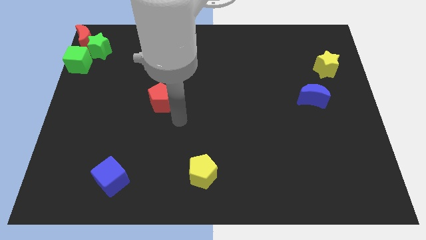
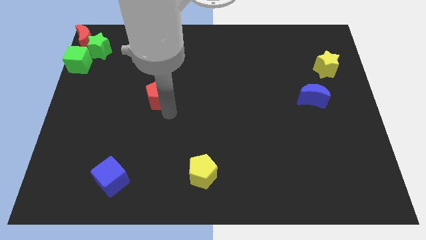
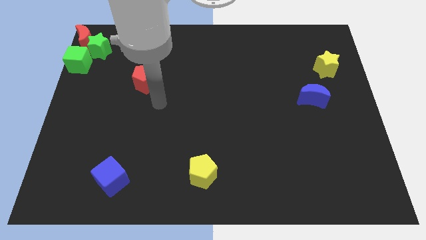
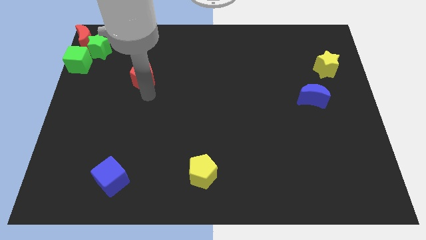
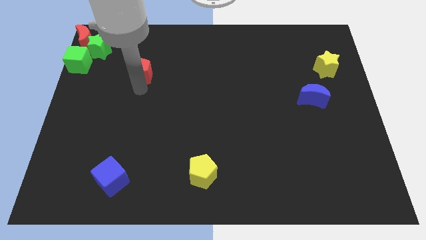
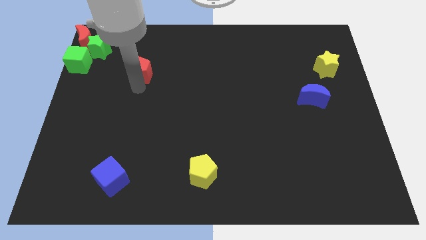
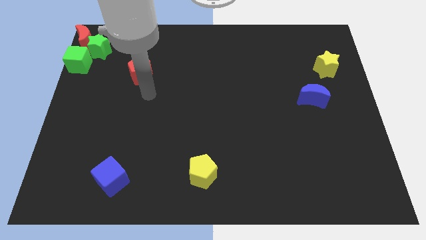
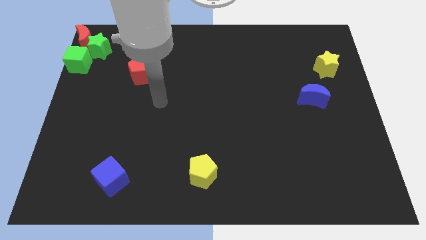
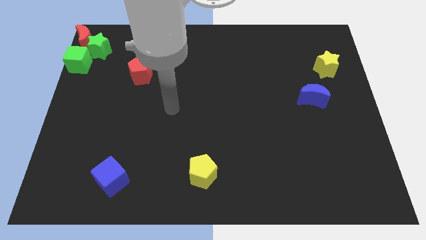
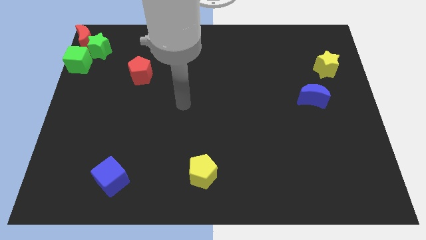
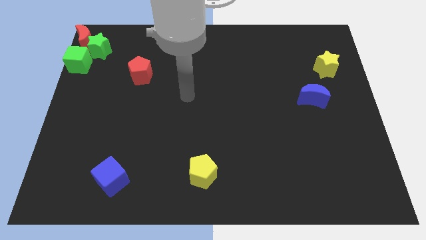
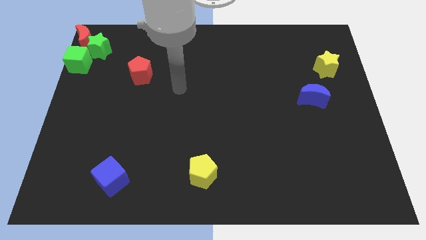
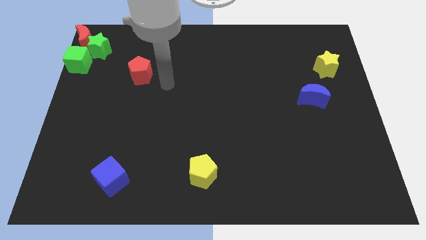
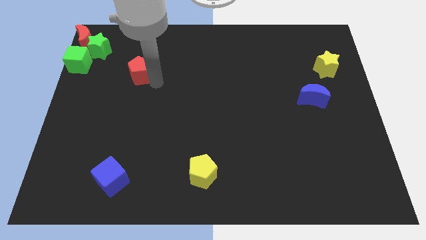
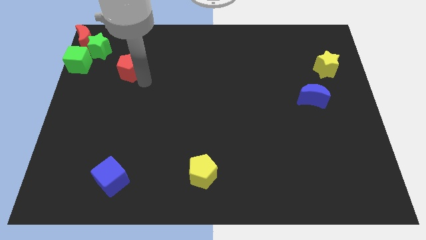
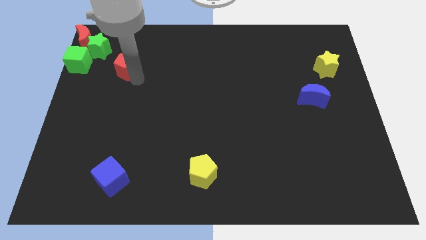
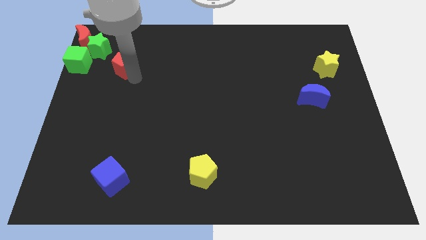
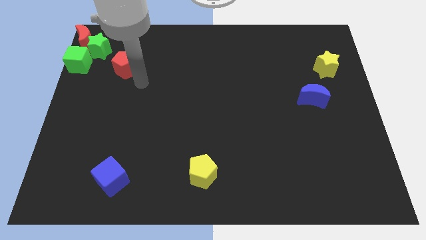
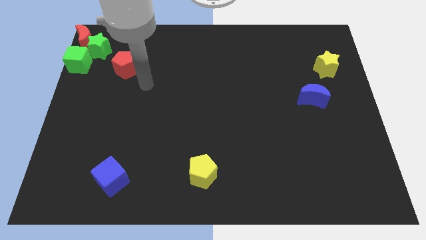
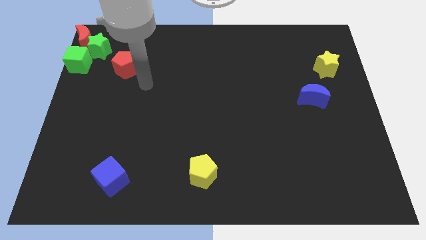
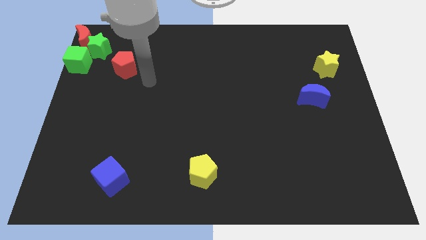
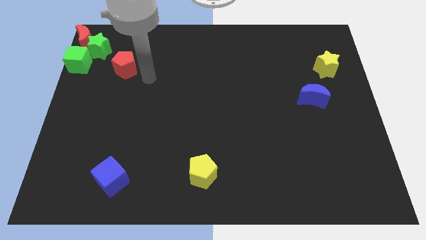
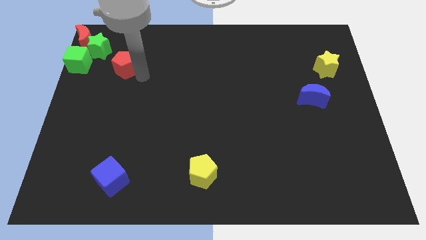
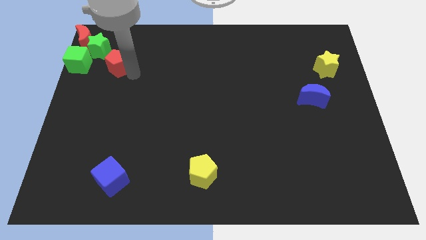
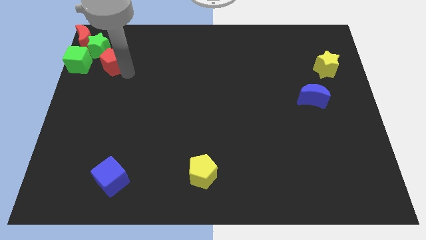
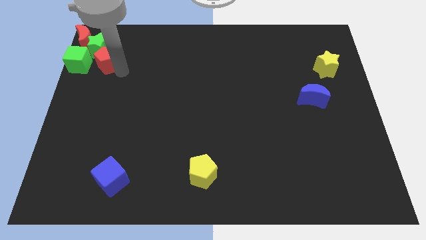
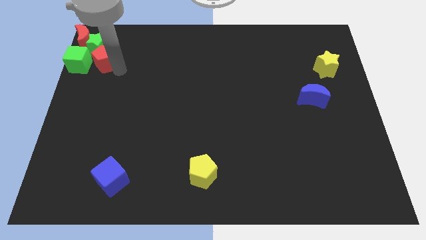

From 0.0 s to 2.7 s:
move the red pentagon close to the blocks

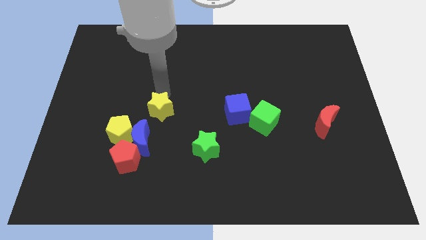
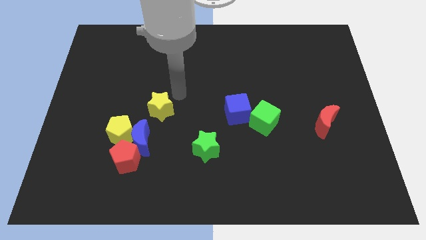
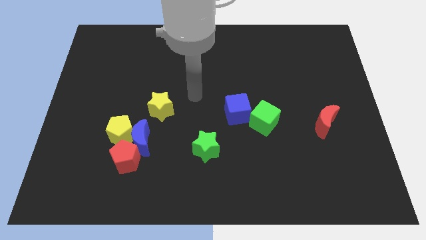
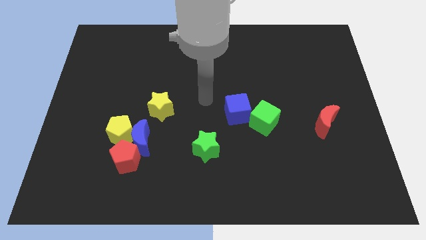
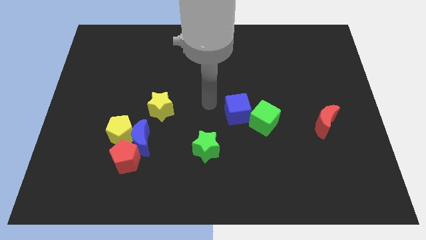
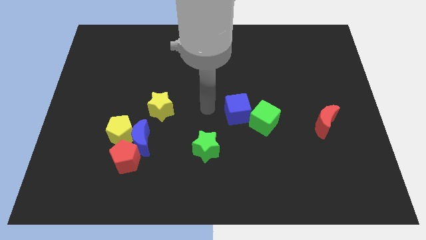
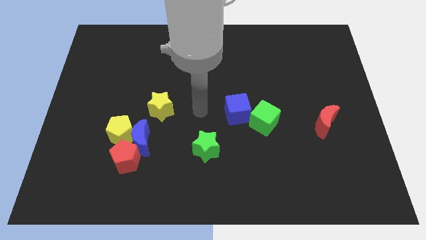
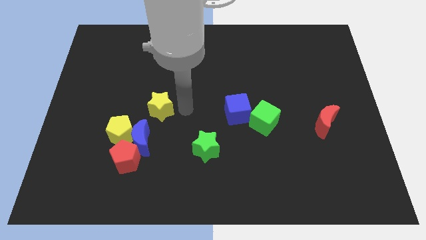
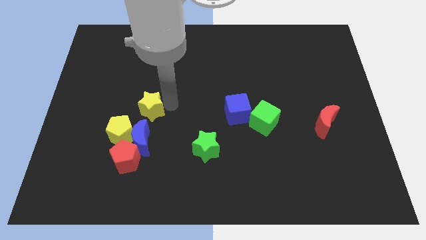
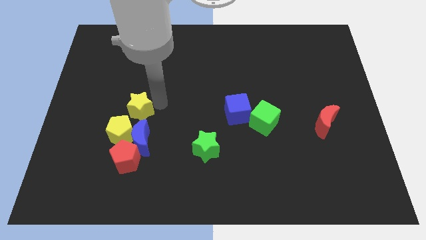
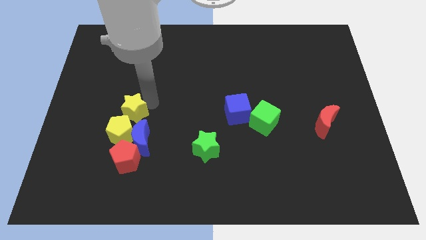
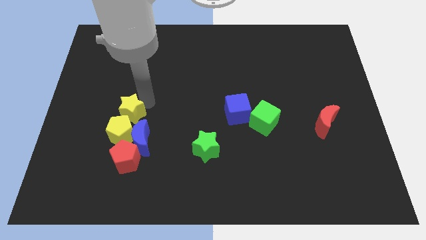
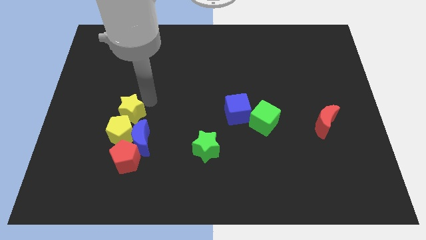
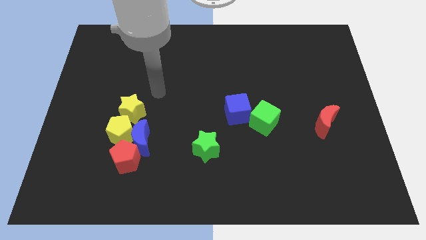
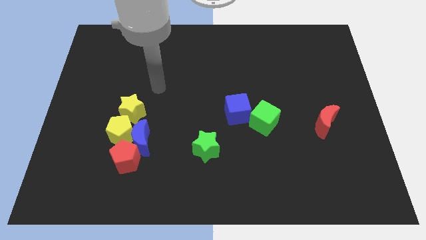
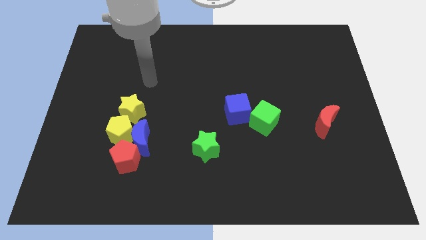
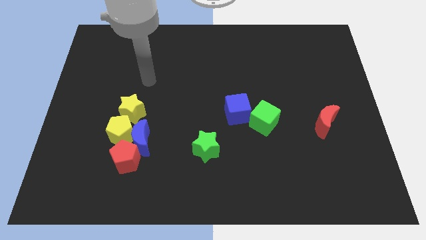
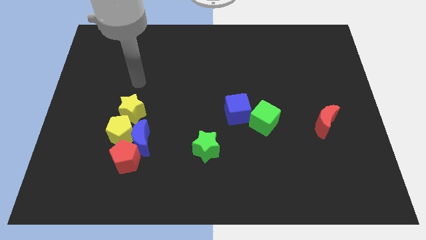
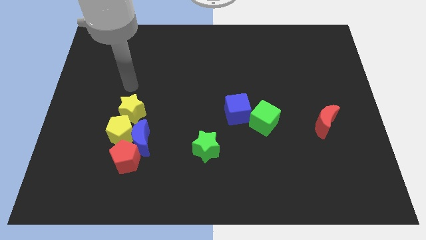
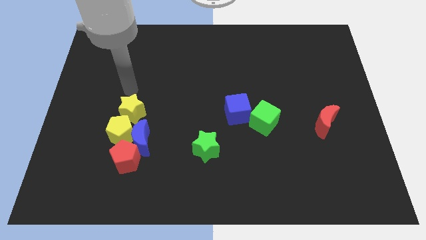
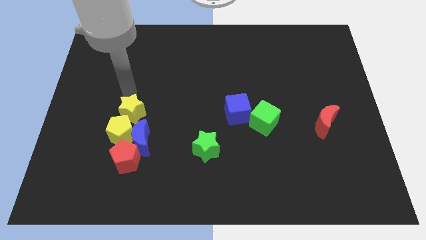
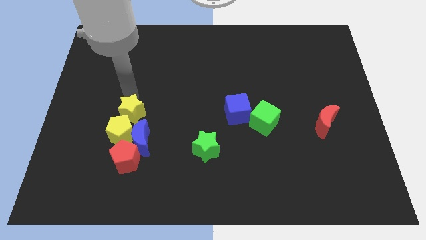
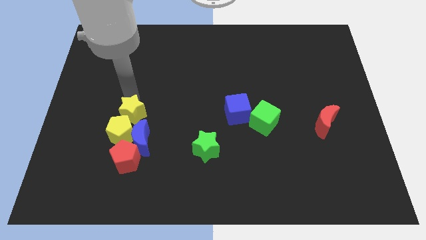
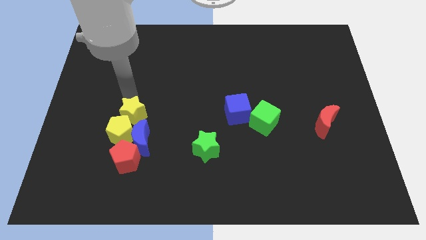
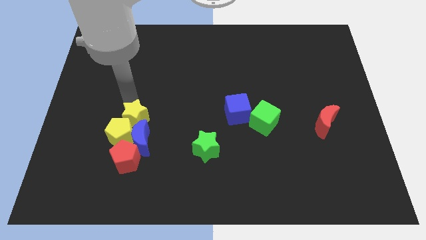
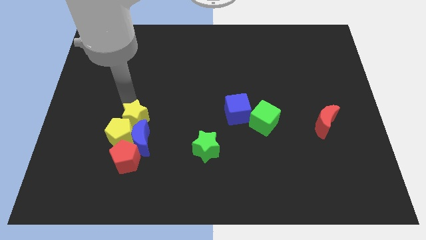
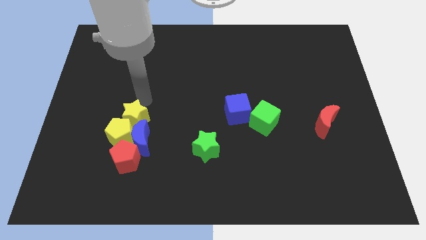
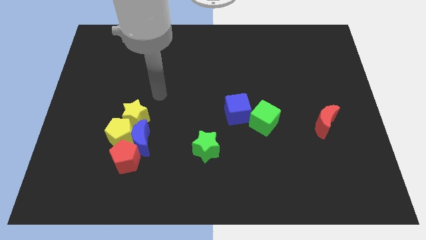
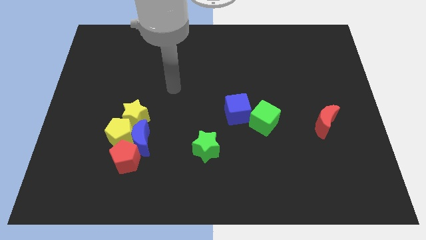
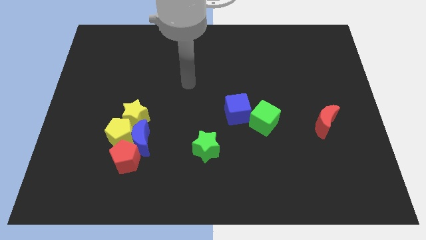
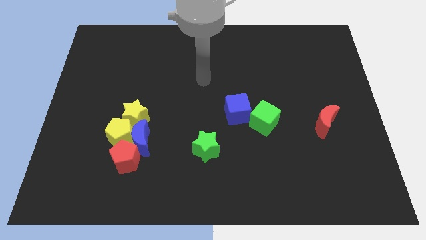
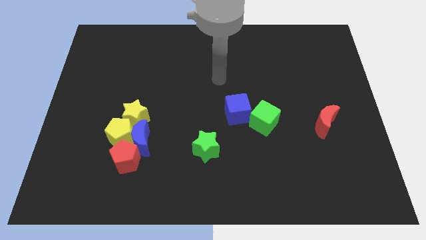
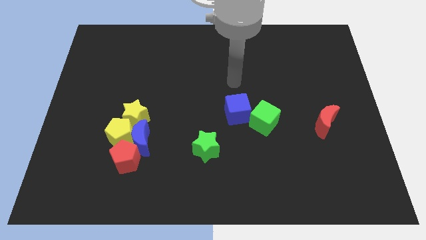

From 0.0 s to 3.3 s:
push yellow star into yellow pentagon

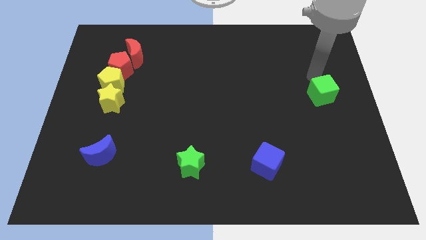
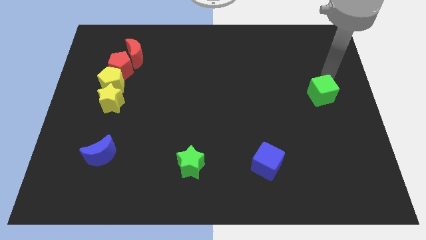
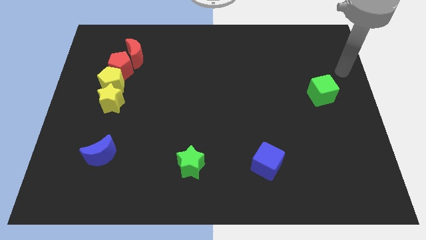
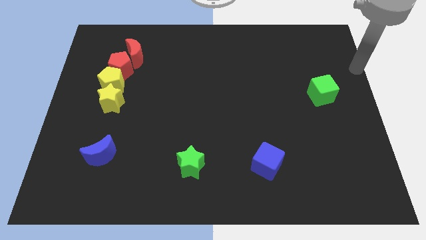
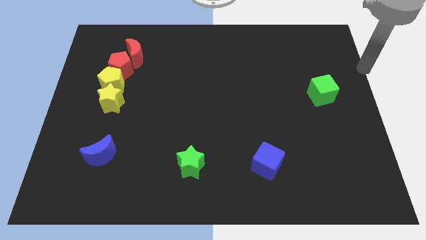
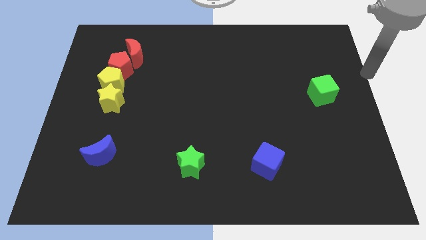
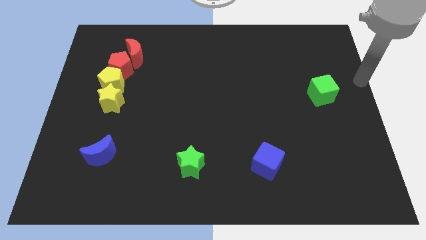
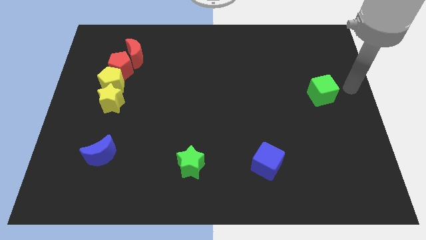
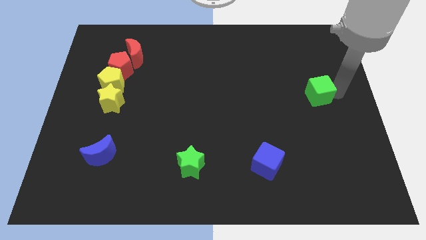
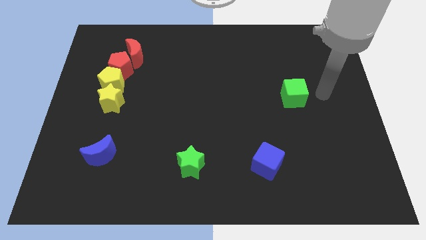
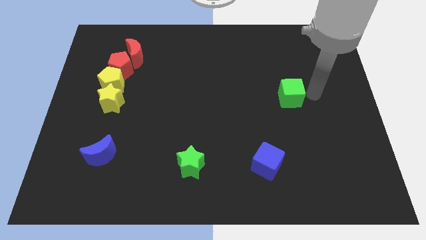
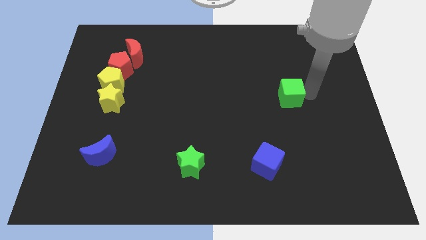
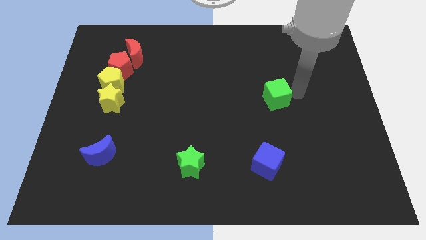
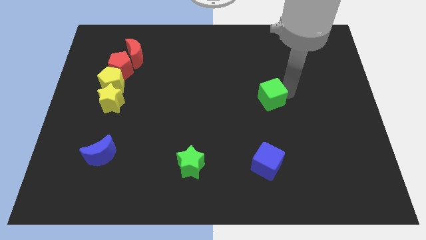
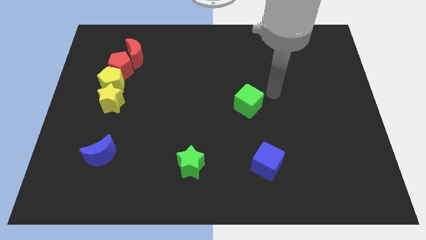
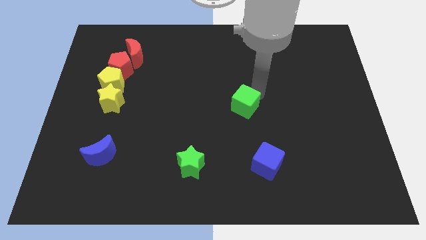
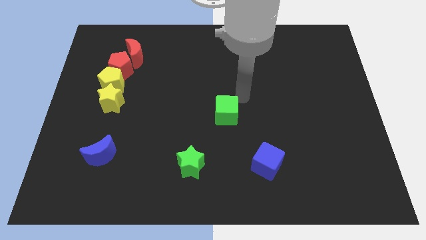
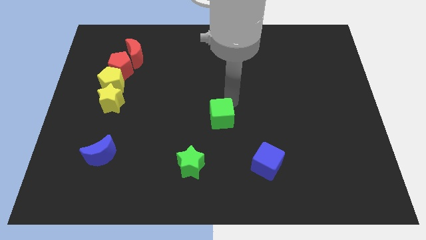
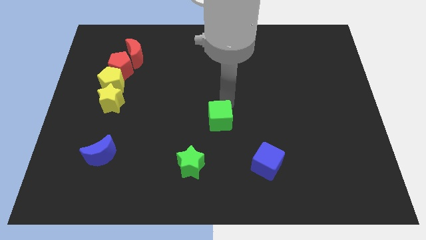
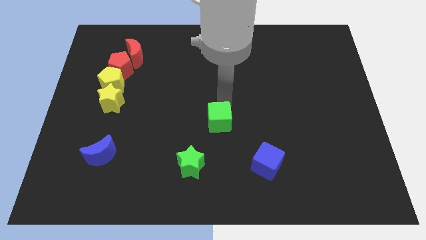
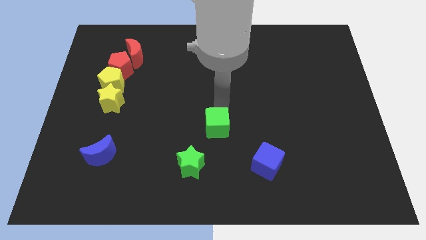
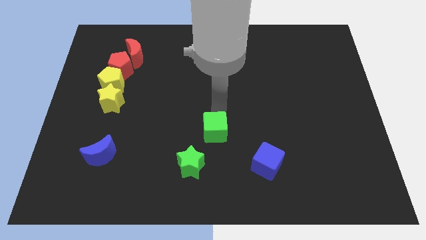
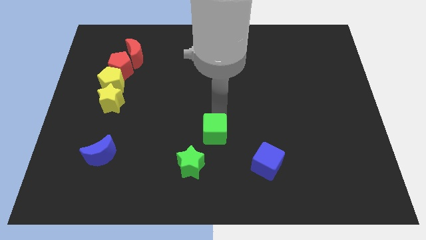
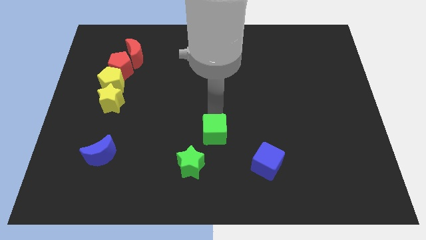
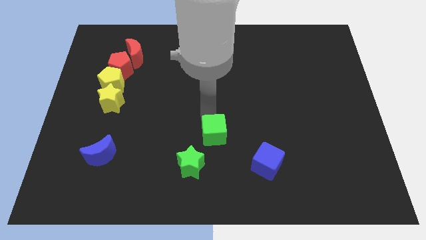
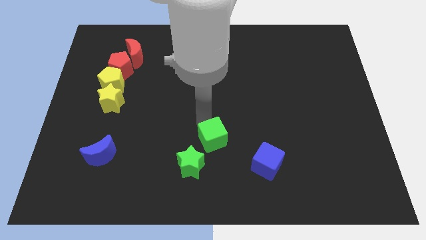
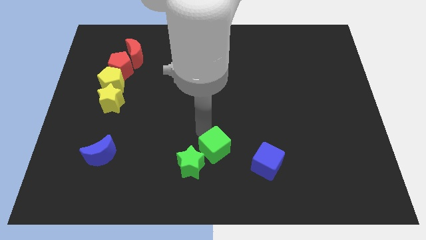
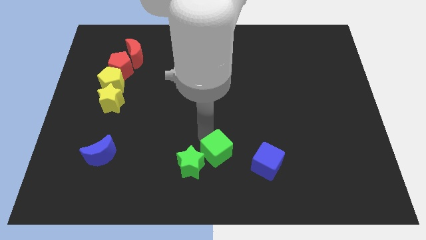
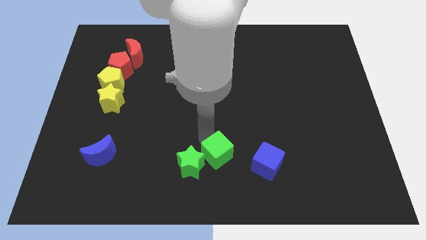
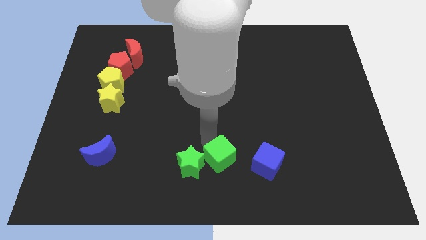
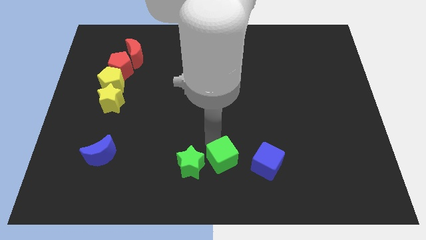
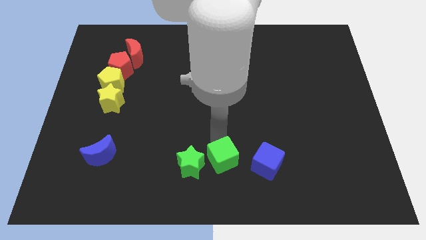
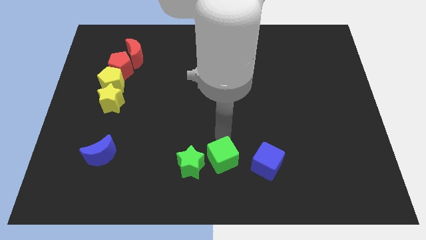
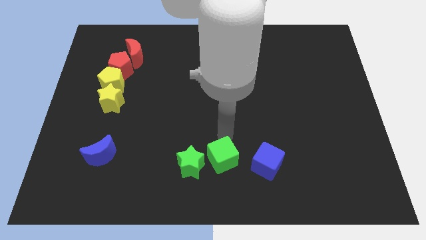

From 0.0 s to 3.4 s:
place the green cube right to the green star
